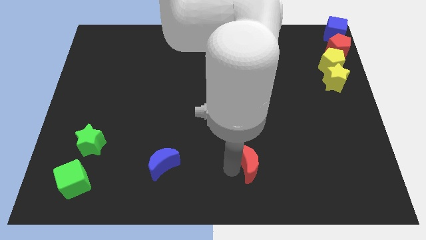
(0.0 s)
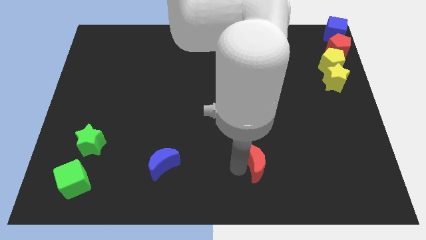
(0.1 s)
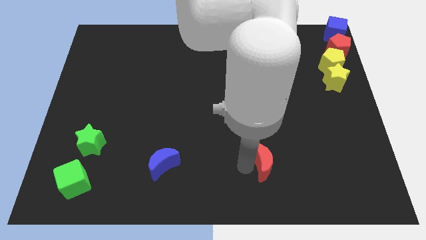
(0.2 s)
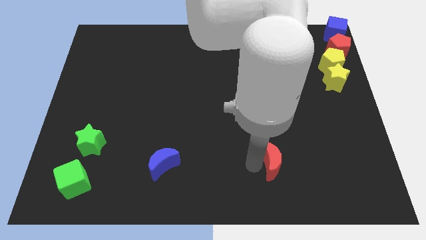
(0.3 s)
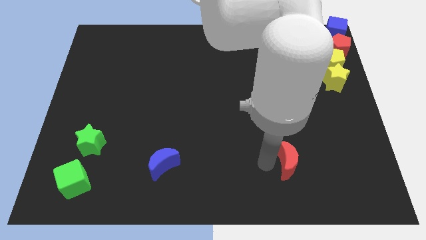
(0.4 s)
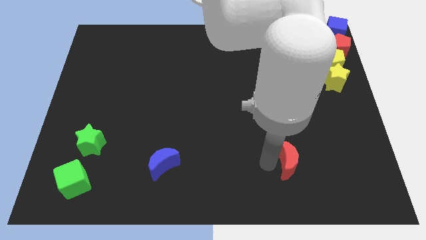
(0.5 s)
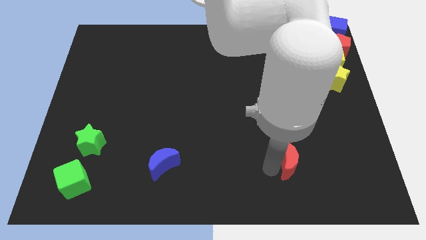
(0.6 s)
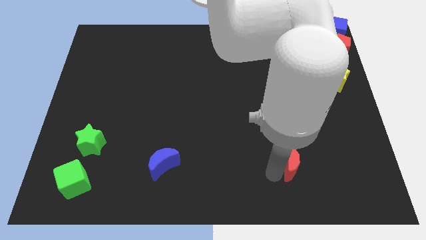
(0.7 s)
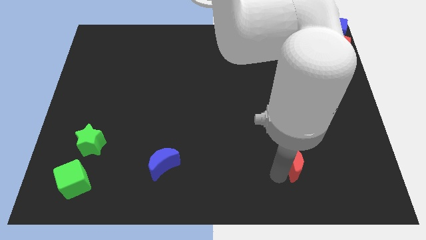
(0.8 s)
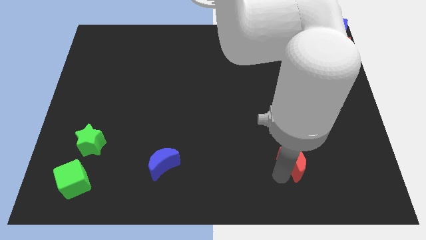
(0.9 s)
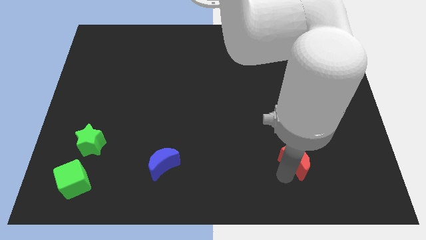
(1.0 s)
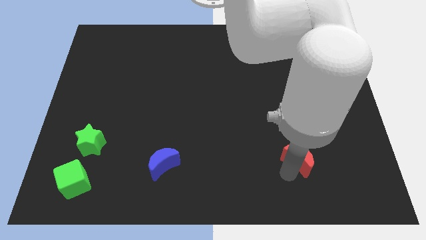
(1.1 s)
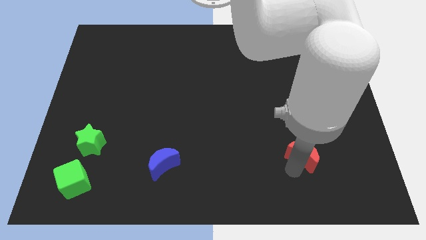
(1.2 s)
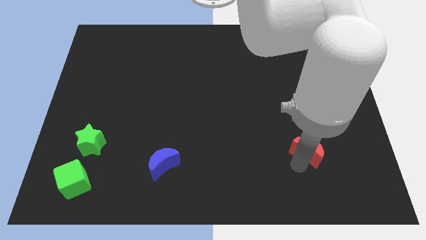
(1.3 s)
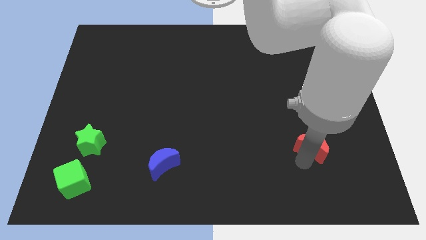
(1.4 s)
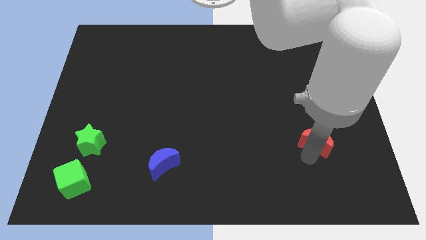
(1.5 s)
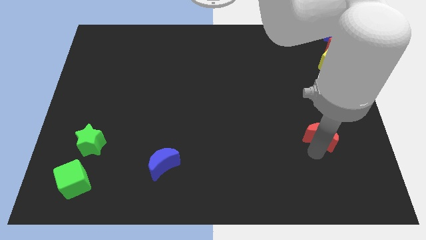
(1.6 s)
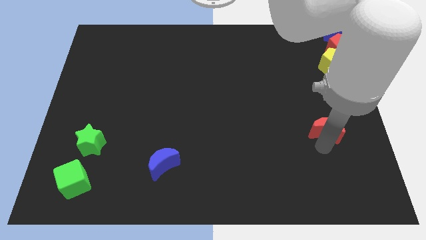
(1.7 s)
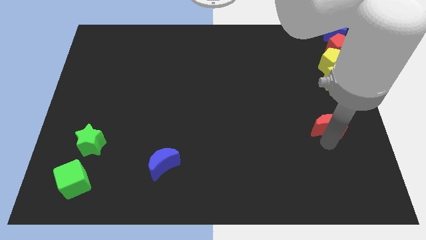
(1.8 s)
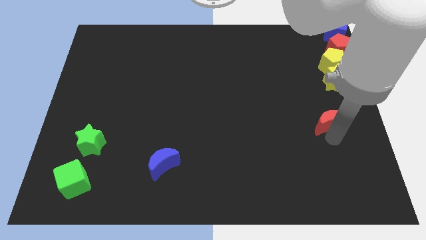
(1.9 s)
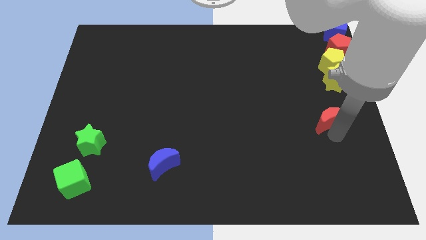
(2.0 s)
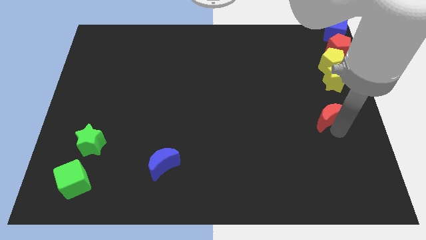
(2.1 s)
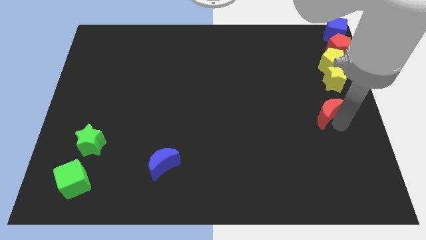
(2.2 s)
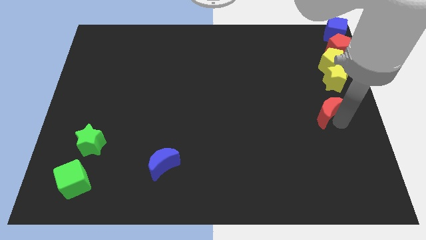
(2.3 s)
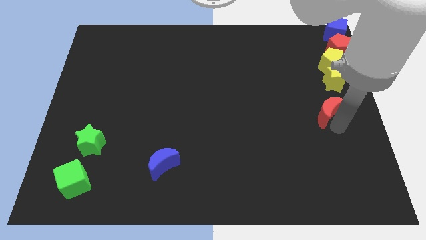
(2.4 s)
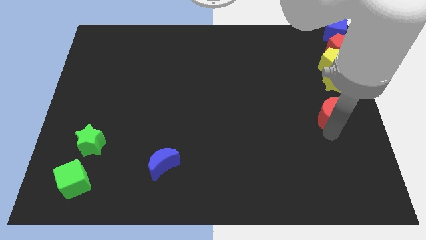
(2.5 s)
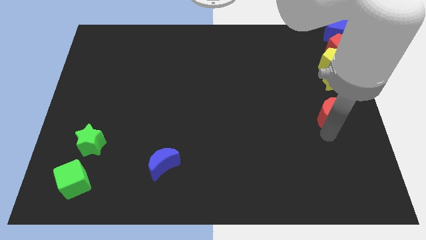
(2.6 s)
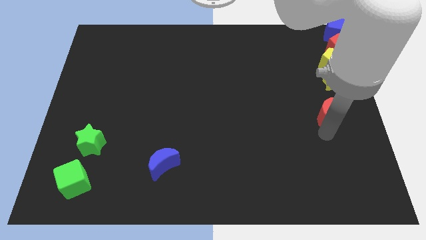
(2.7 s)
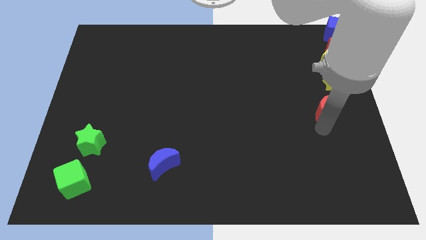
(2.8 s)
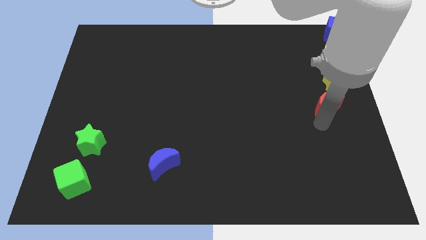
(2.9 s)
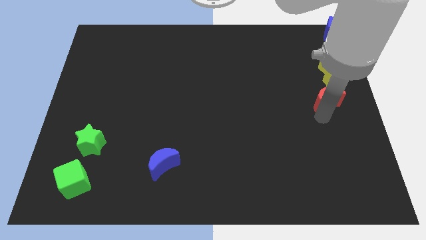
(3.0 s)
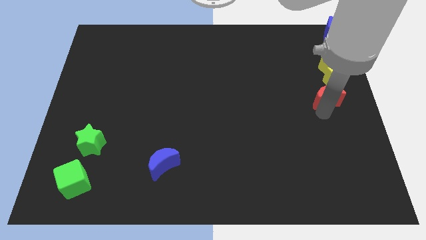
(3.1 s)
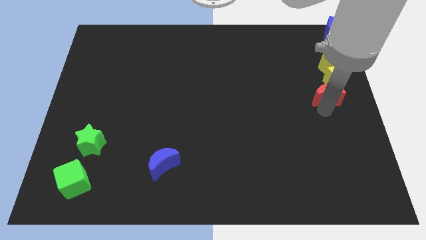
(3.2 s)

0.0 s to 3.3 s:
place the red crescent at the bottom of yellow star

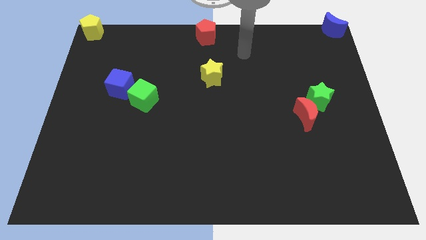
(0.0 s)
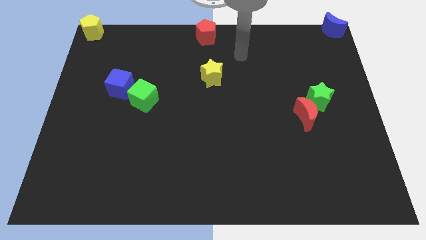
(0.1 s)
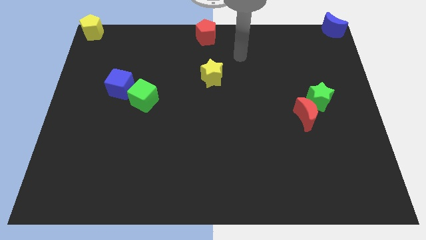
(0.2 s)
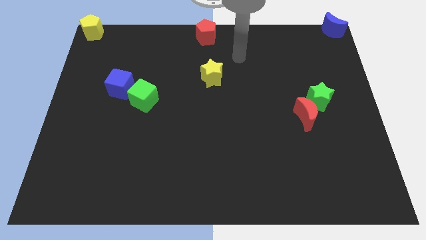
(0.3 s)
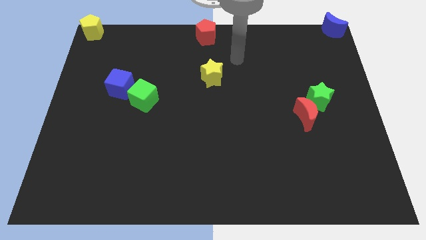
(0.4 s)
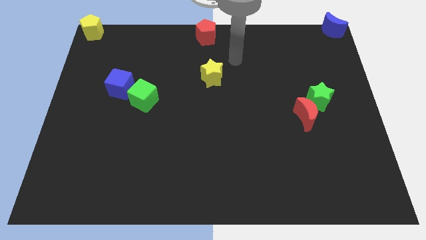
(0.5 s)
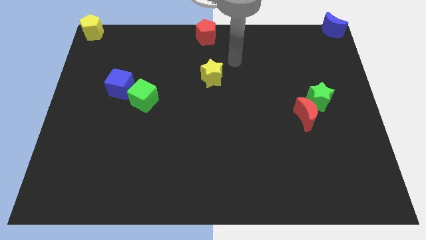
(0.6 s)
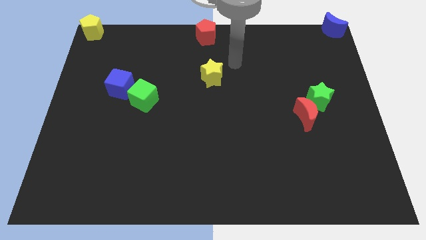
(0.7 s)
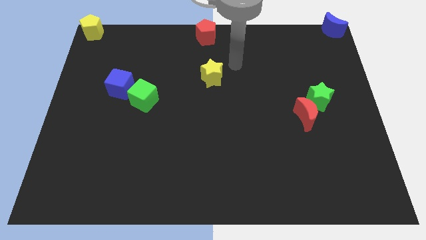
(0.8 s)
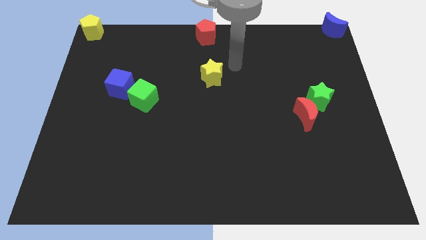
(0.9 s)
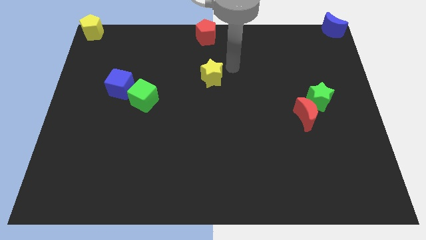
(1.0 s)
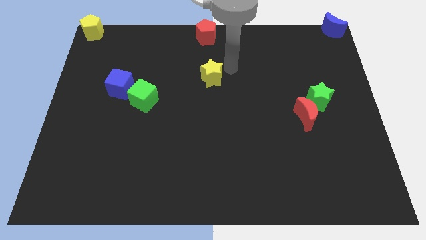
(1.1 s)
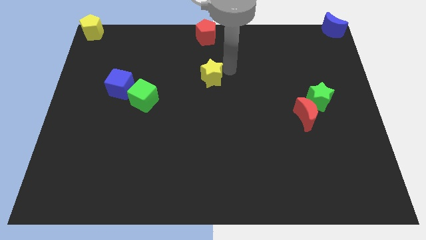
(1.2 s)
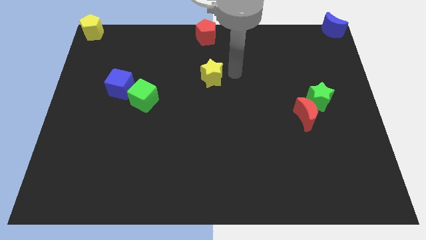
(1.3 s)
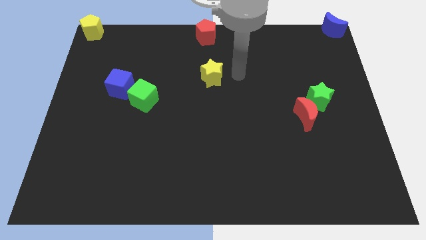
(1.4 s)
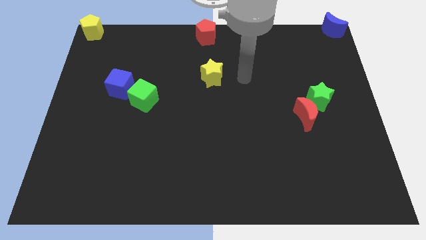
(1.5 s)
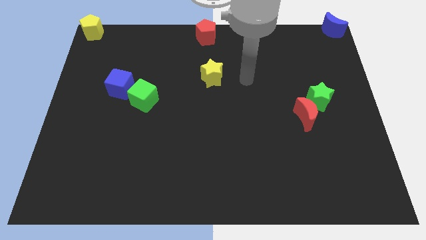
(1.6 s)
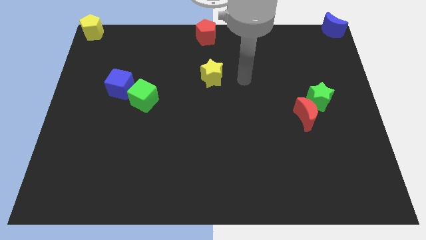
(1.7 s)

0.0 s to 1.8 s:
point your arm at the right side of the yellow star

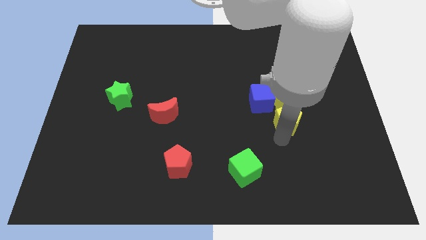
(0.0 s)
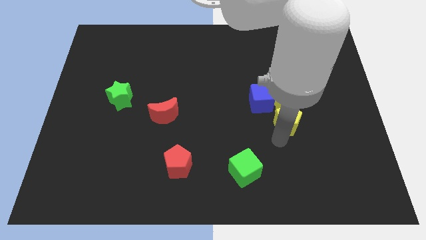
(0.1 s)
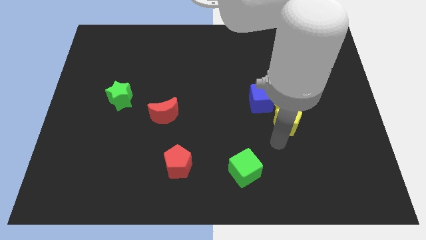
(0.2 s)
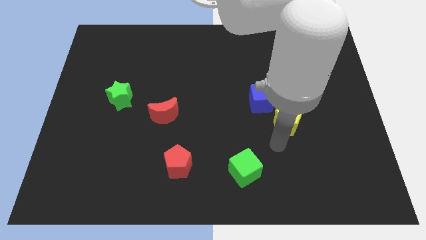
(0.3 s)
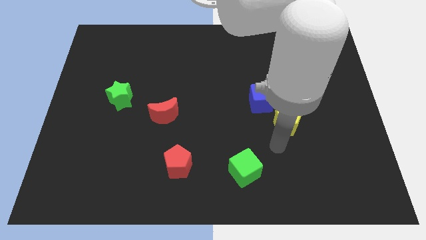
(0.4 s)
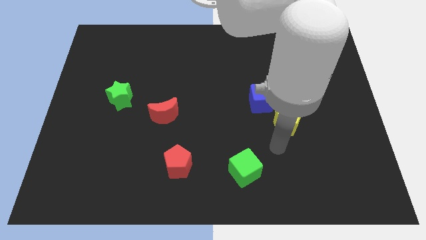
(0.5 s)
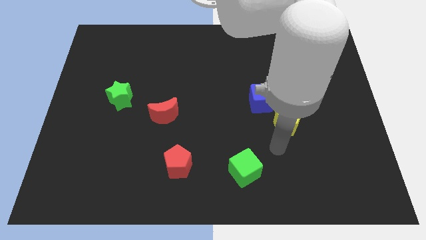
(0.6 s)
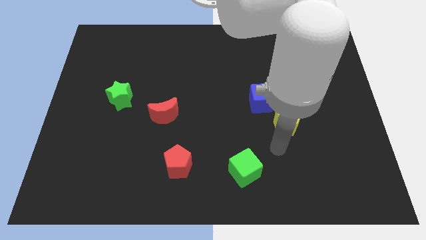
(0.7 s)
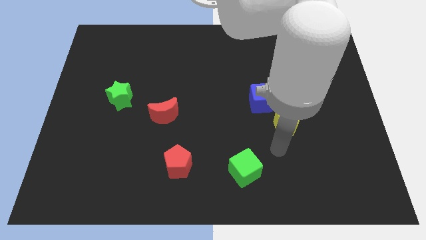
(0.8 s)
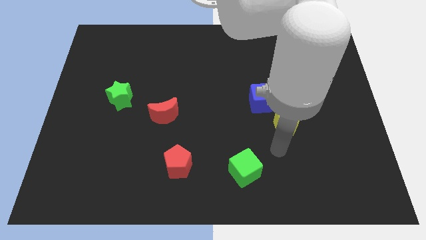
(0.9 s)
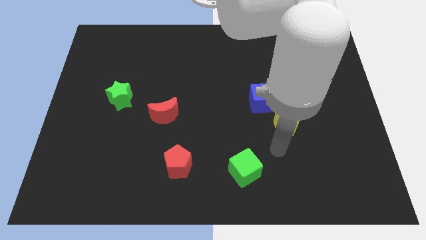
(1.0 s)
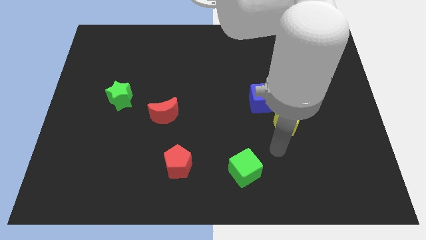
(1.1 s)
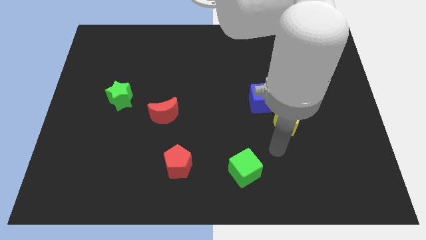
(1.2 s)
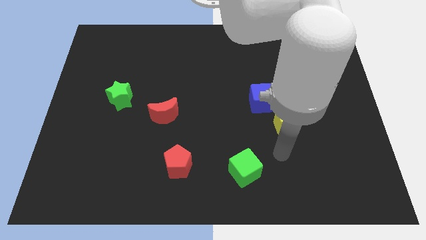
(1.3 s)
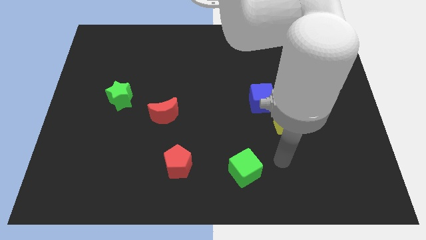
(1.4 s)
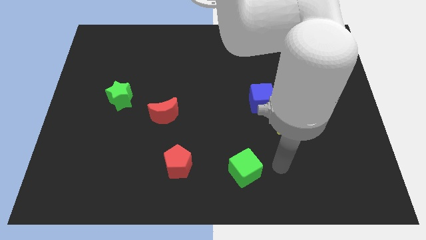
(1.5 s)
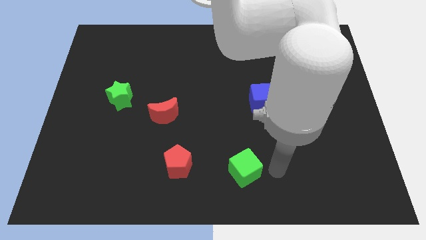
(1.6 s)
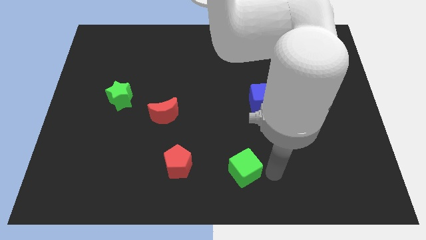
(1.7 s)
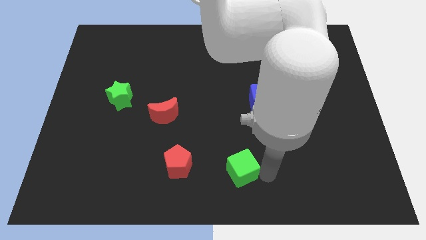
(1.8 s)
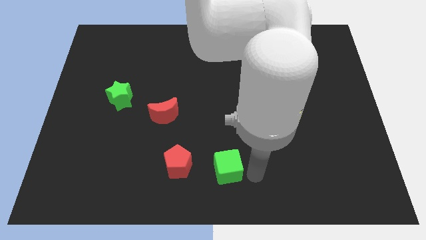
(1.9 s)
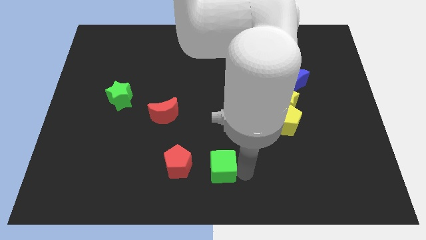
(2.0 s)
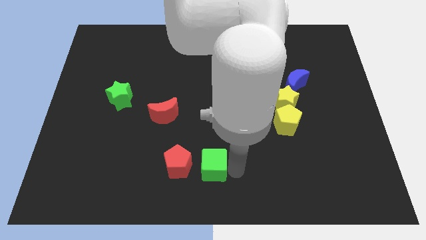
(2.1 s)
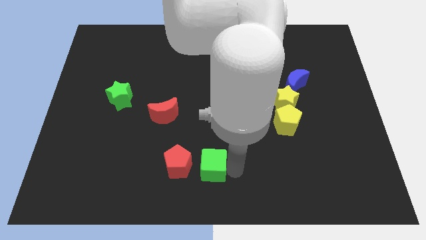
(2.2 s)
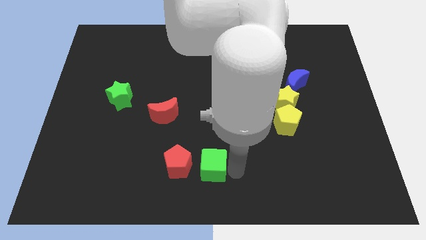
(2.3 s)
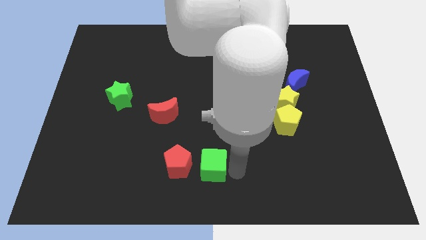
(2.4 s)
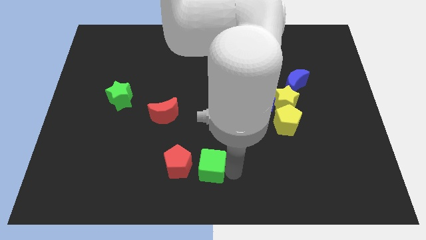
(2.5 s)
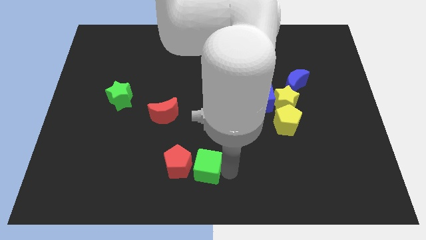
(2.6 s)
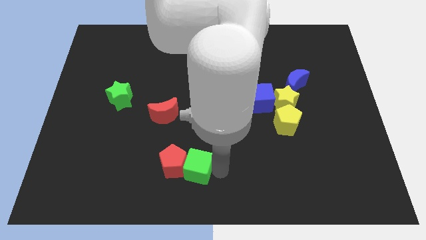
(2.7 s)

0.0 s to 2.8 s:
push the green cube into the red pentagon

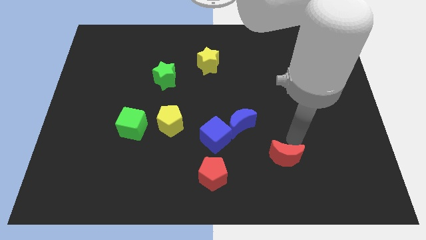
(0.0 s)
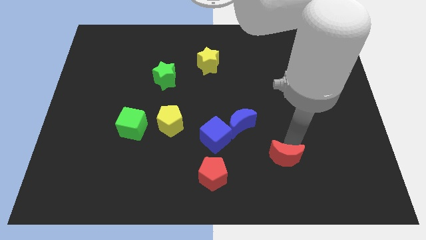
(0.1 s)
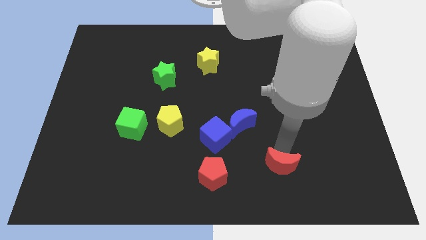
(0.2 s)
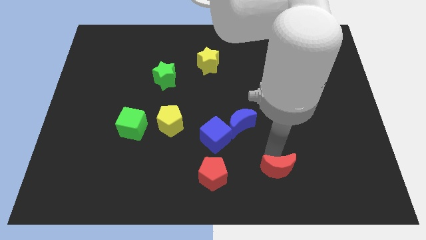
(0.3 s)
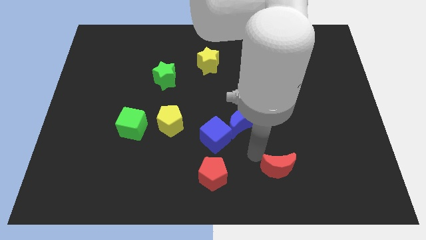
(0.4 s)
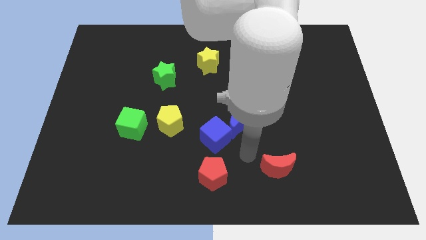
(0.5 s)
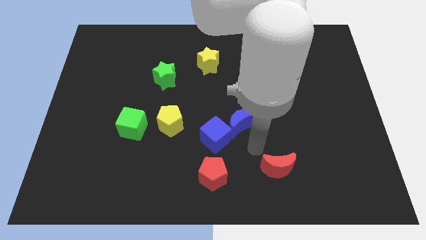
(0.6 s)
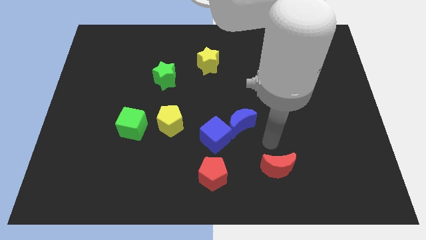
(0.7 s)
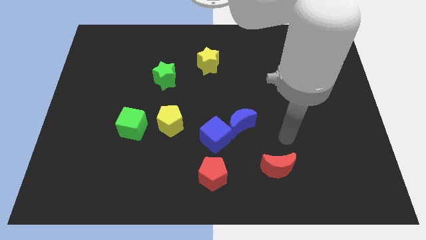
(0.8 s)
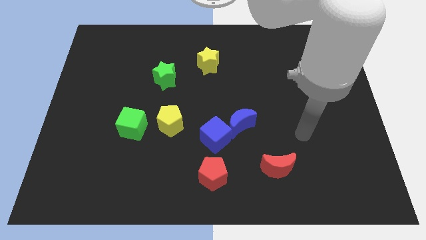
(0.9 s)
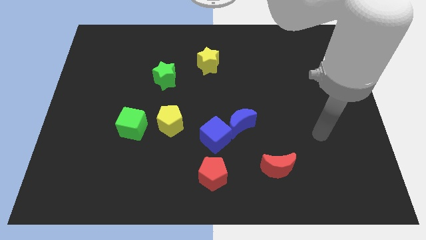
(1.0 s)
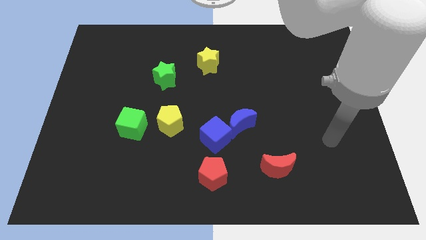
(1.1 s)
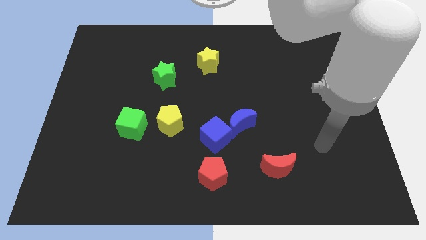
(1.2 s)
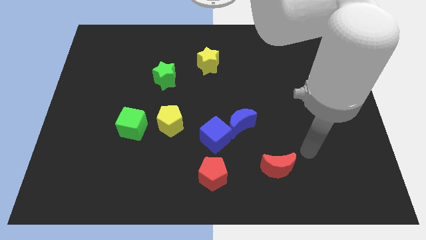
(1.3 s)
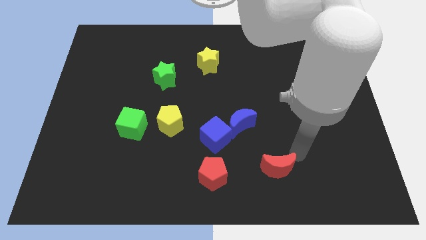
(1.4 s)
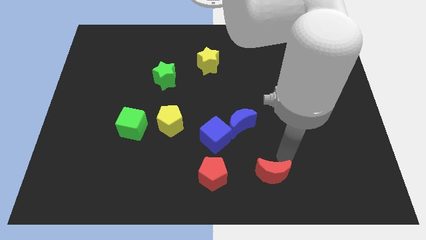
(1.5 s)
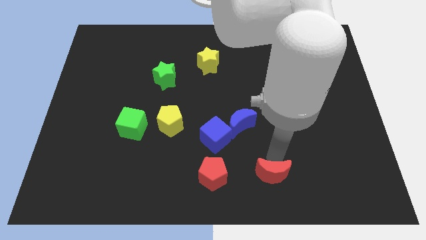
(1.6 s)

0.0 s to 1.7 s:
place the red moon to the right of the red pentagon
